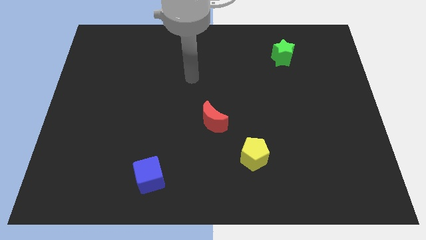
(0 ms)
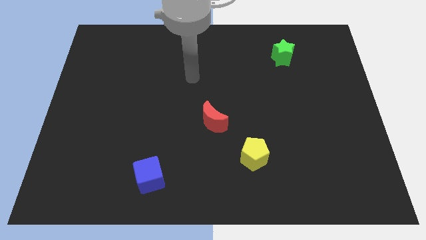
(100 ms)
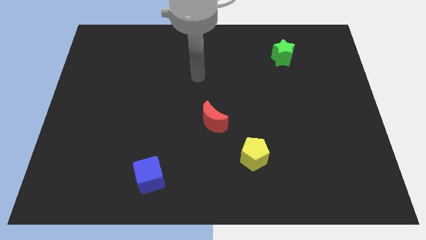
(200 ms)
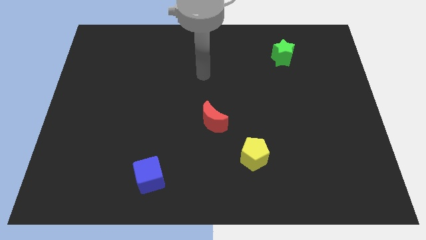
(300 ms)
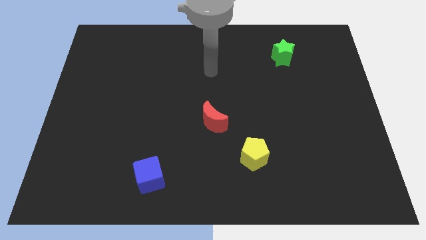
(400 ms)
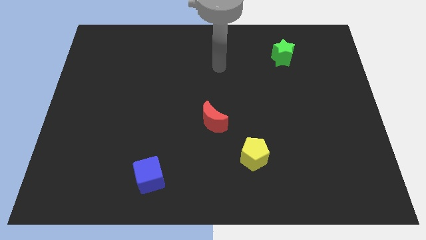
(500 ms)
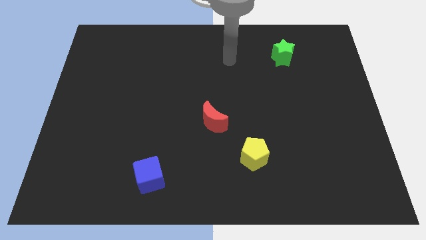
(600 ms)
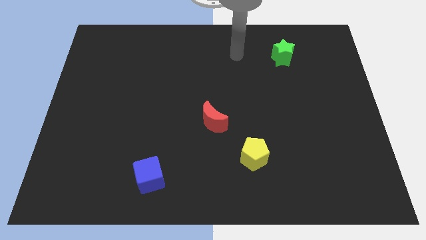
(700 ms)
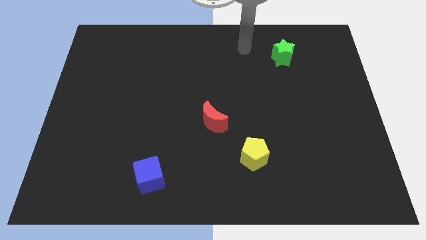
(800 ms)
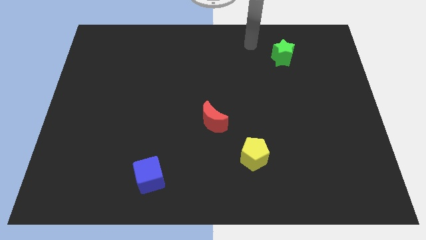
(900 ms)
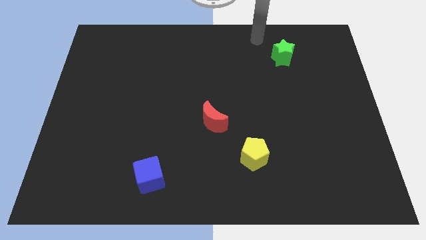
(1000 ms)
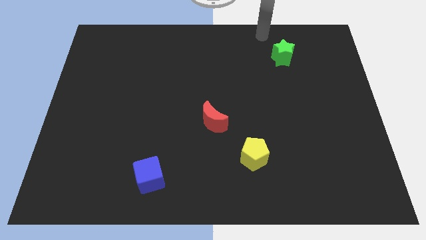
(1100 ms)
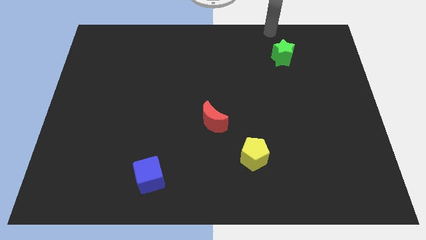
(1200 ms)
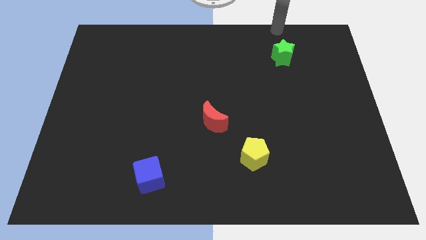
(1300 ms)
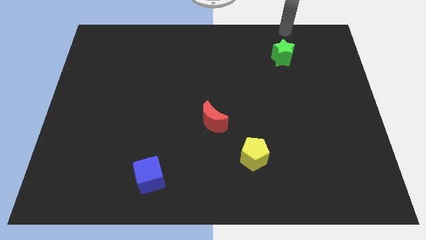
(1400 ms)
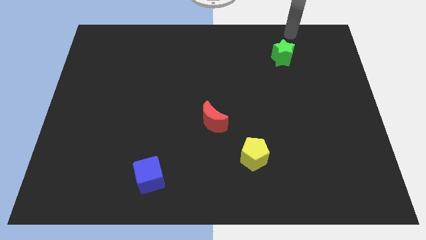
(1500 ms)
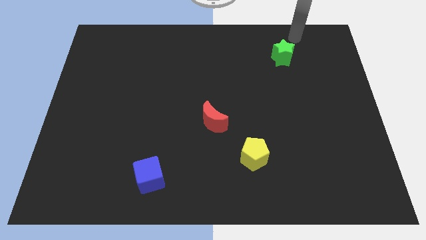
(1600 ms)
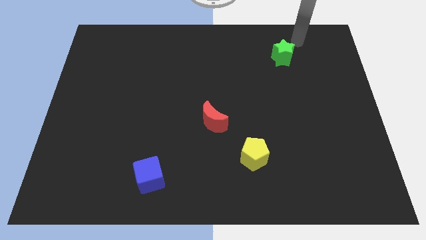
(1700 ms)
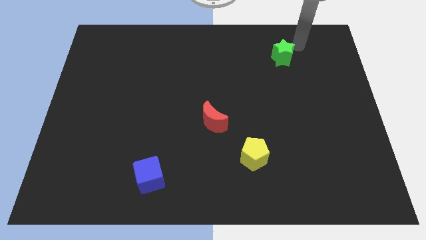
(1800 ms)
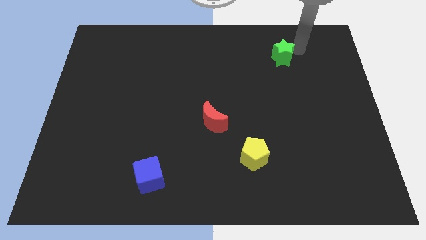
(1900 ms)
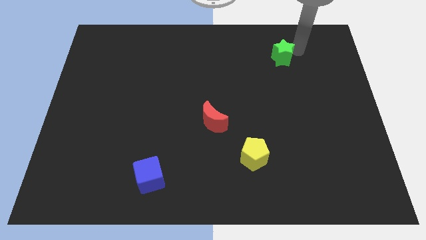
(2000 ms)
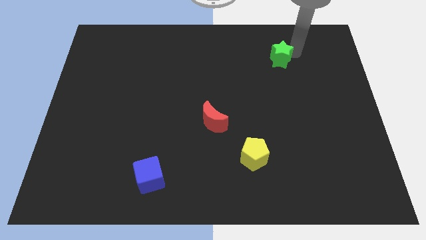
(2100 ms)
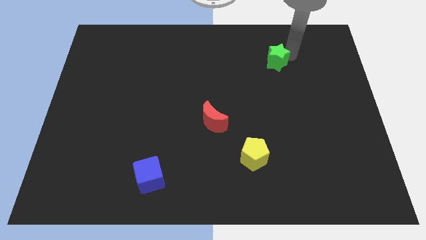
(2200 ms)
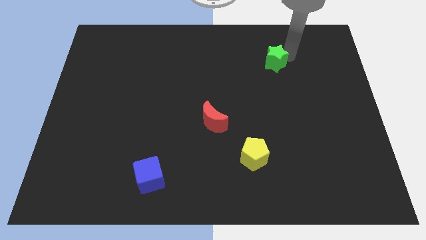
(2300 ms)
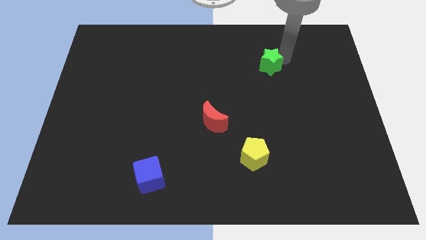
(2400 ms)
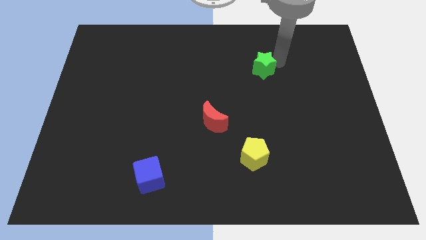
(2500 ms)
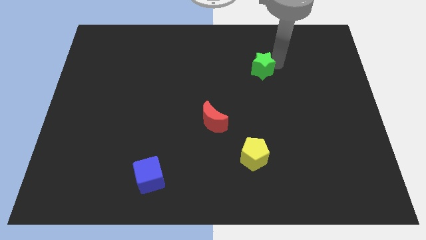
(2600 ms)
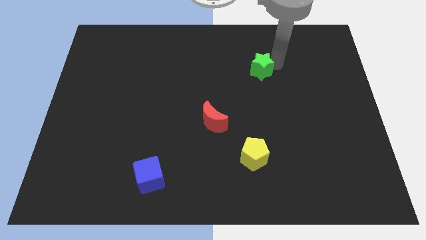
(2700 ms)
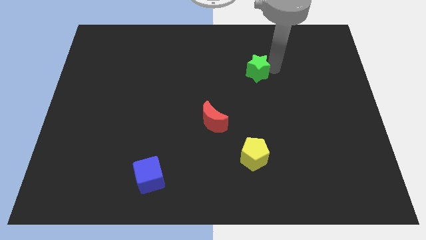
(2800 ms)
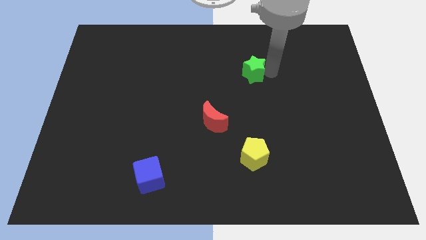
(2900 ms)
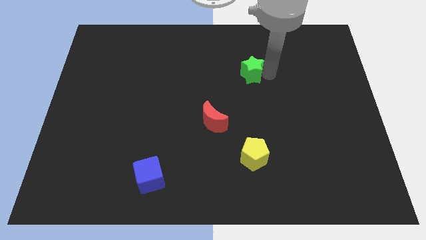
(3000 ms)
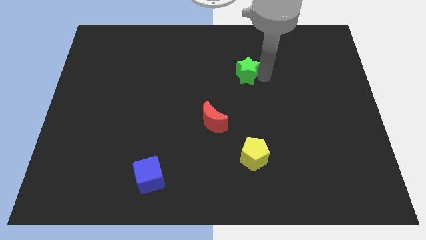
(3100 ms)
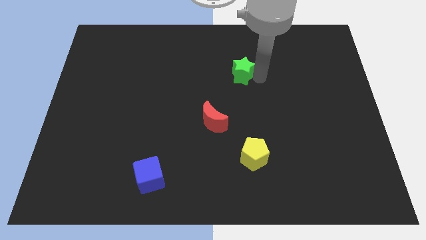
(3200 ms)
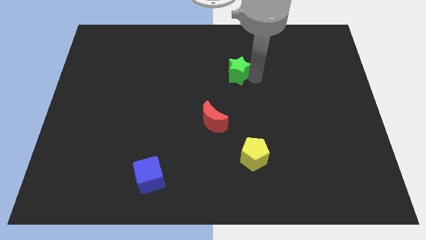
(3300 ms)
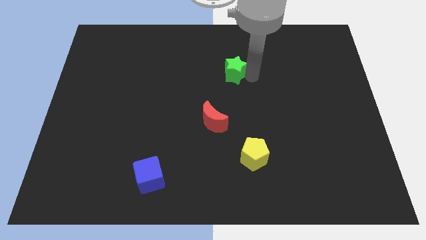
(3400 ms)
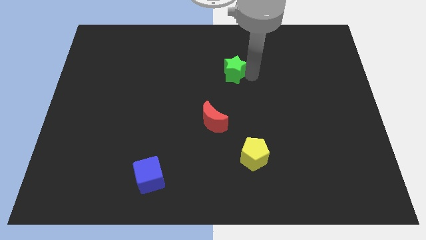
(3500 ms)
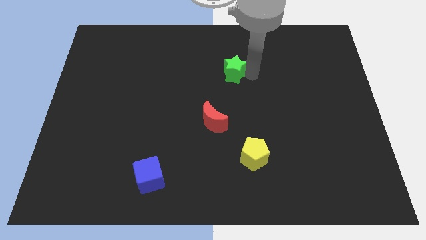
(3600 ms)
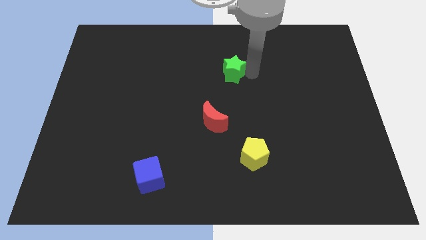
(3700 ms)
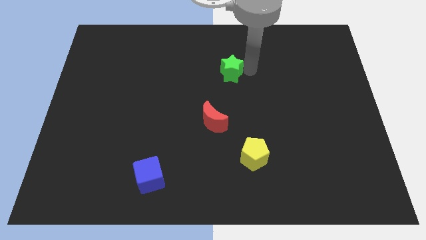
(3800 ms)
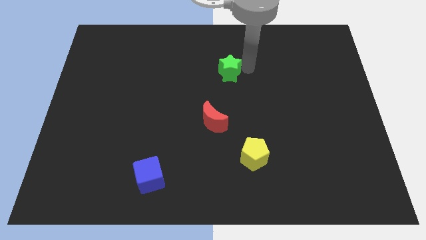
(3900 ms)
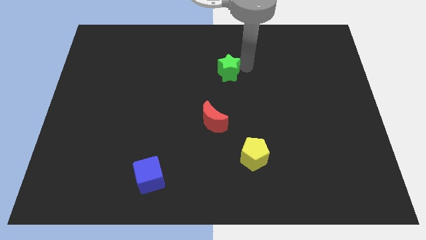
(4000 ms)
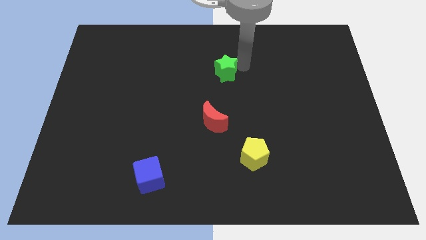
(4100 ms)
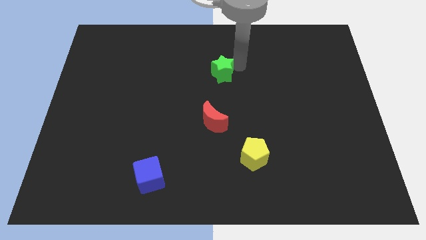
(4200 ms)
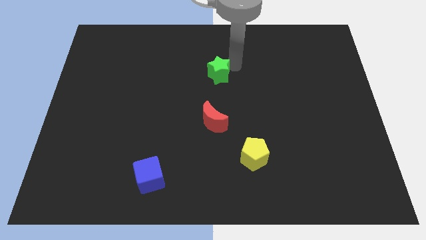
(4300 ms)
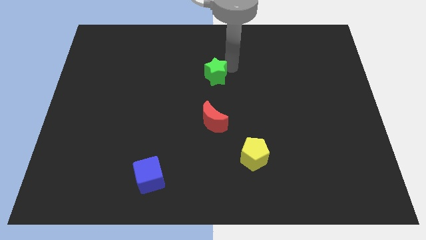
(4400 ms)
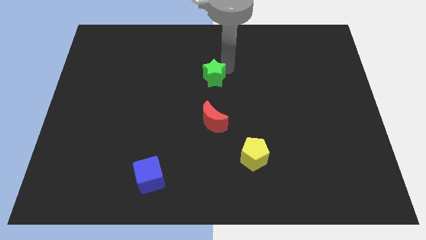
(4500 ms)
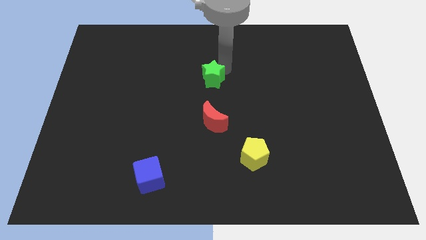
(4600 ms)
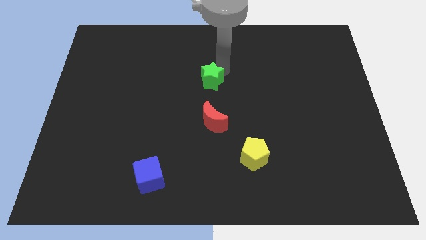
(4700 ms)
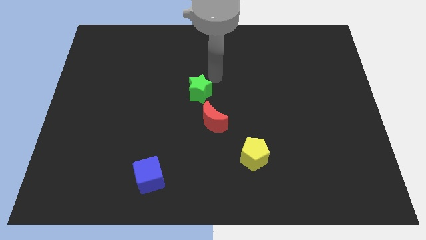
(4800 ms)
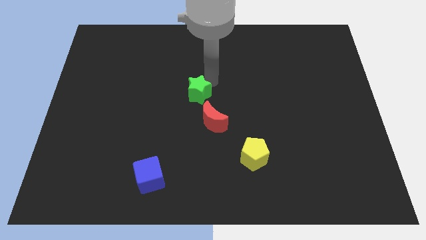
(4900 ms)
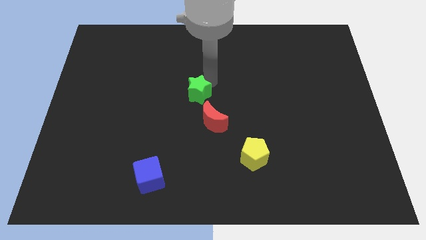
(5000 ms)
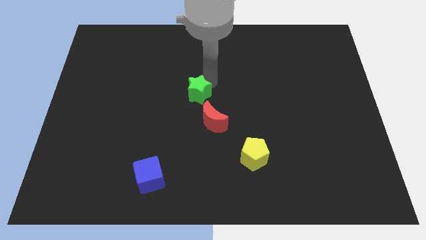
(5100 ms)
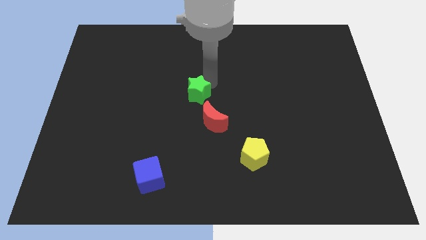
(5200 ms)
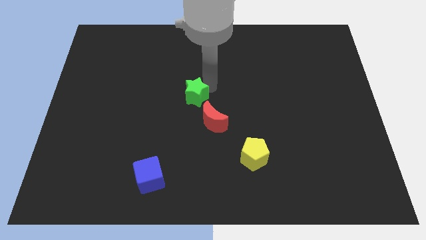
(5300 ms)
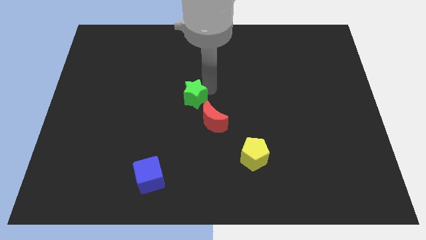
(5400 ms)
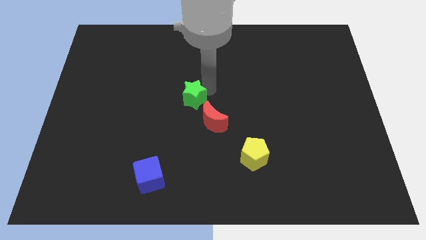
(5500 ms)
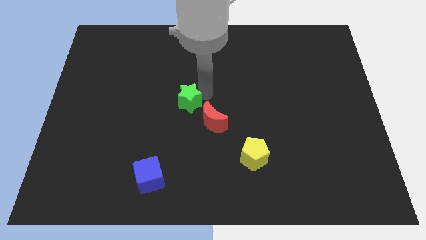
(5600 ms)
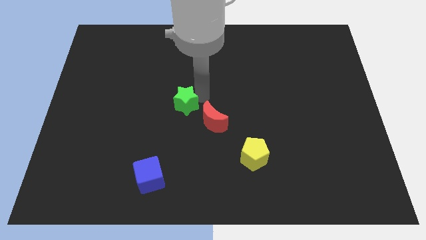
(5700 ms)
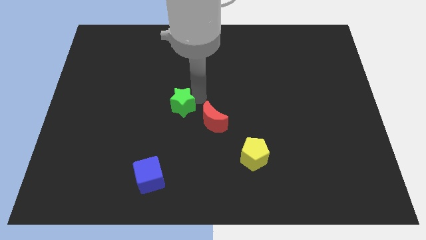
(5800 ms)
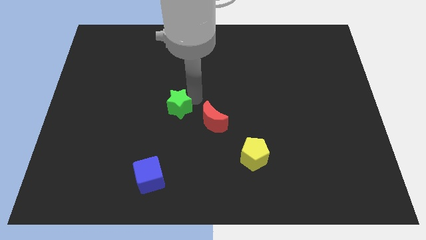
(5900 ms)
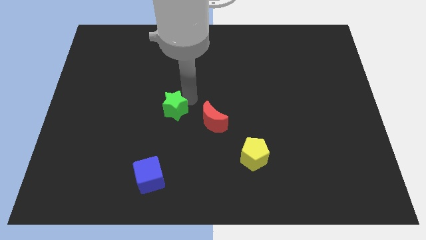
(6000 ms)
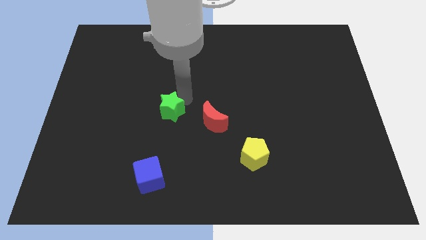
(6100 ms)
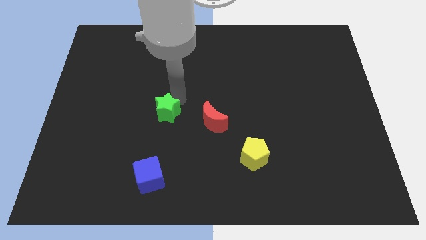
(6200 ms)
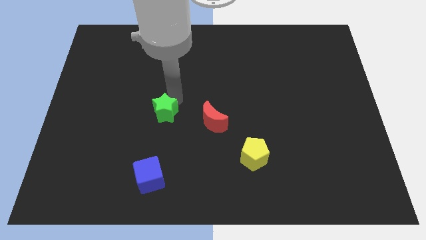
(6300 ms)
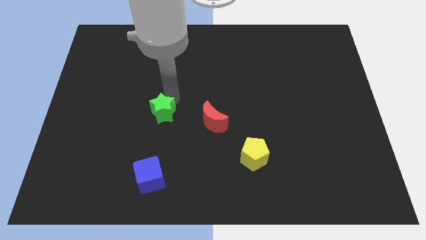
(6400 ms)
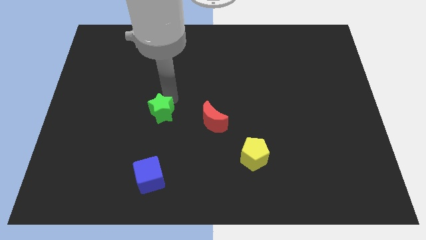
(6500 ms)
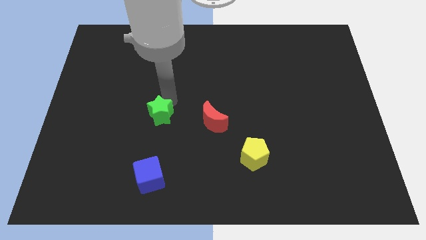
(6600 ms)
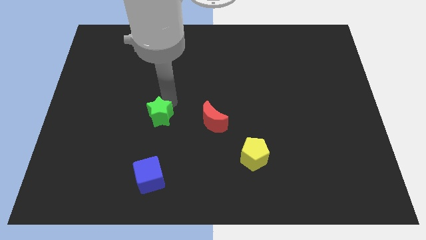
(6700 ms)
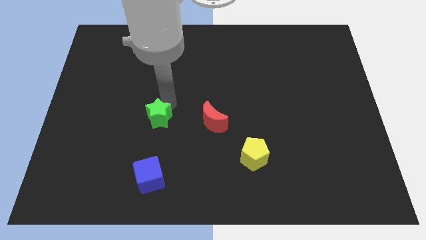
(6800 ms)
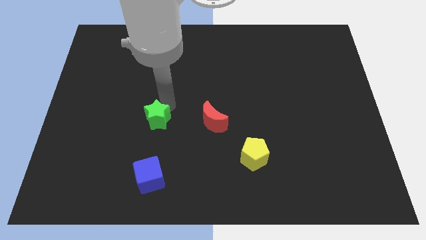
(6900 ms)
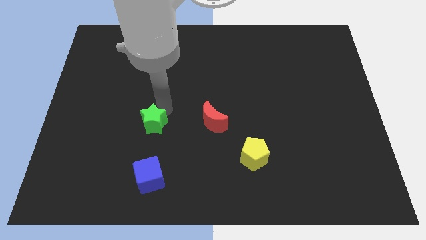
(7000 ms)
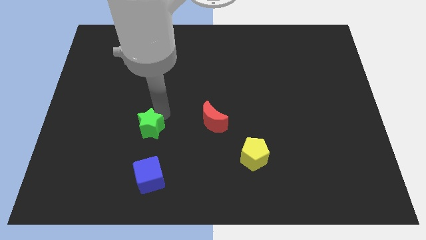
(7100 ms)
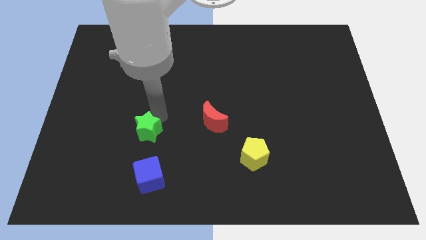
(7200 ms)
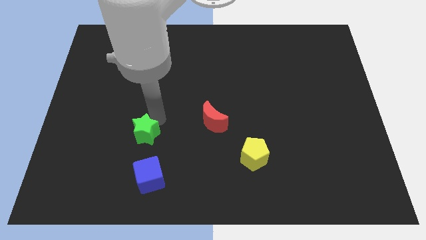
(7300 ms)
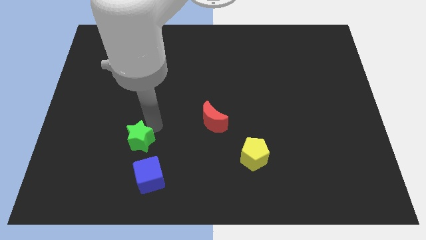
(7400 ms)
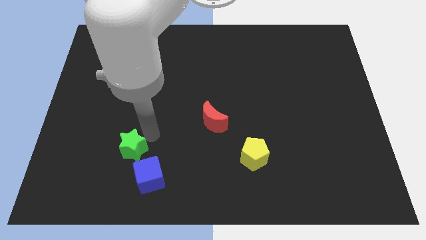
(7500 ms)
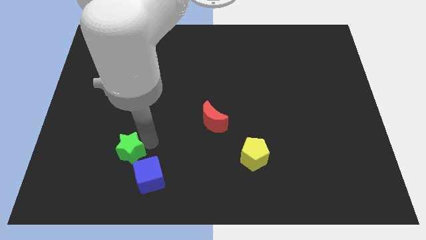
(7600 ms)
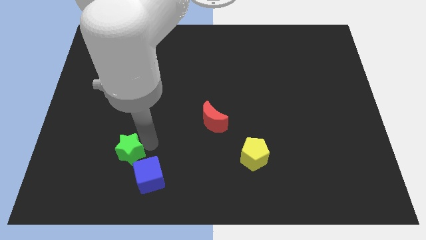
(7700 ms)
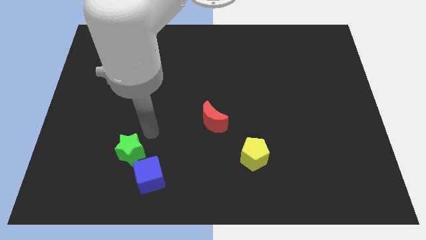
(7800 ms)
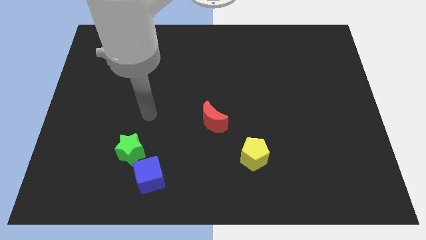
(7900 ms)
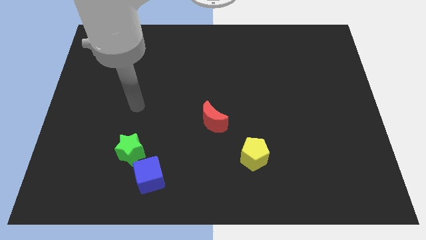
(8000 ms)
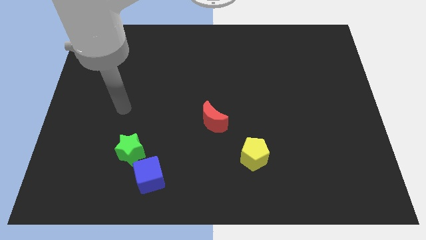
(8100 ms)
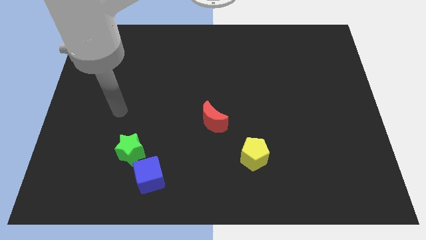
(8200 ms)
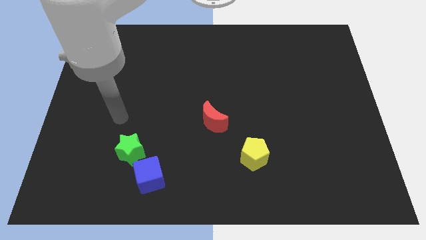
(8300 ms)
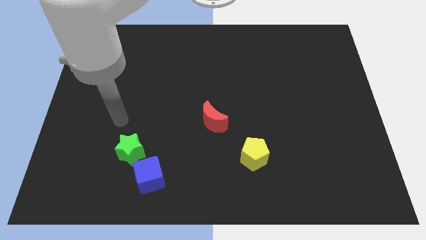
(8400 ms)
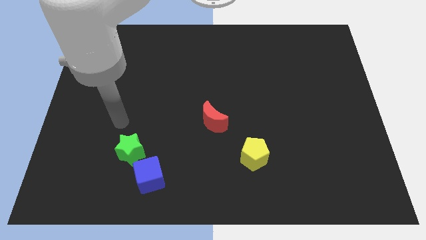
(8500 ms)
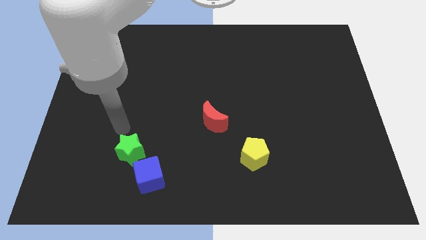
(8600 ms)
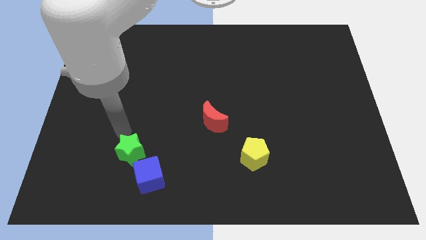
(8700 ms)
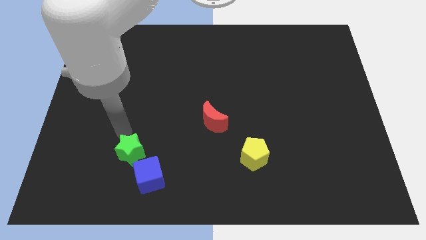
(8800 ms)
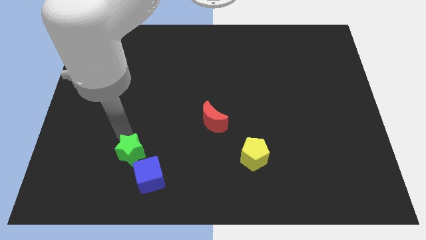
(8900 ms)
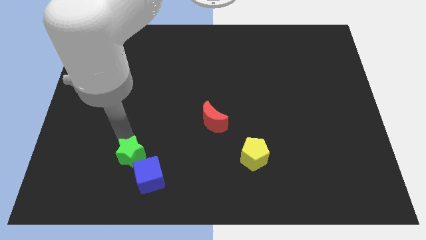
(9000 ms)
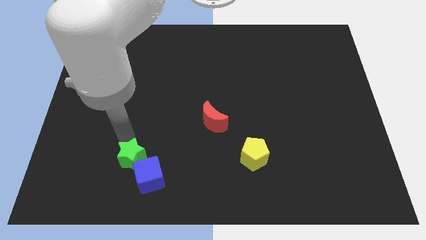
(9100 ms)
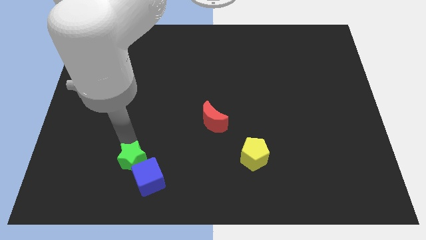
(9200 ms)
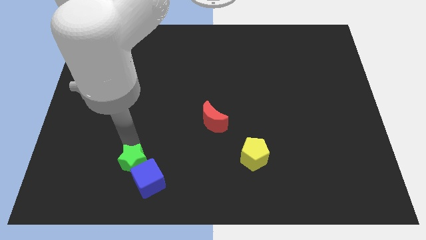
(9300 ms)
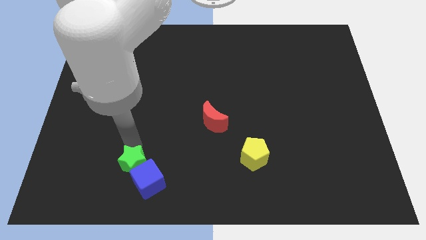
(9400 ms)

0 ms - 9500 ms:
put the green block to the cube
